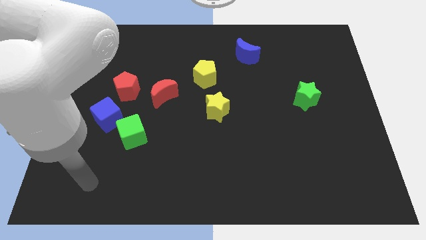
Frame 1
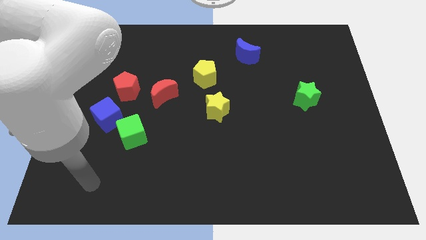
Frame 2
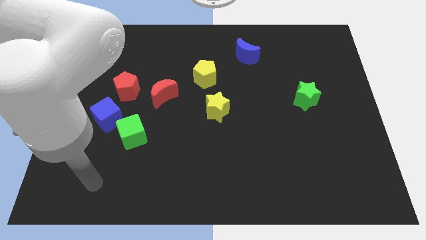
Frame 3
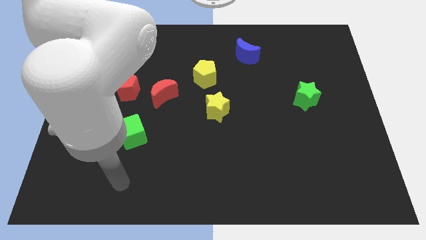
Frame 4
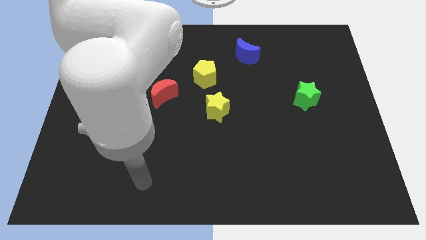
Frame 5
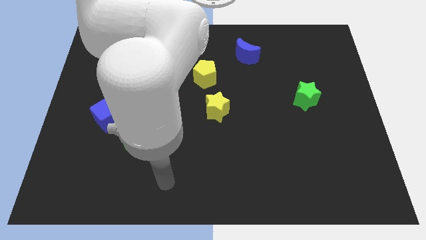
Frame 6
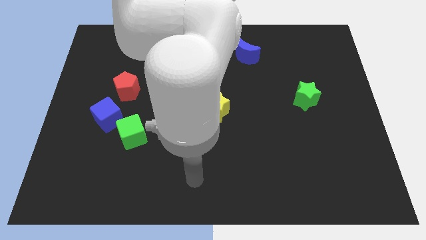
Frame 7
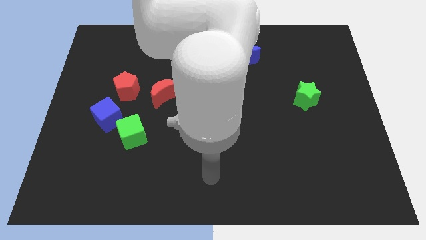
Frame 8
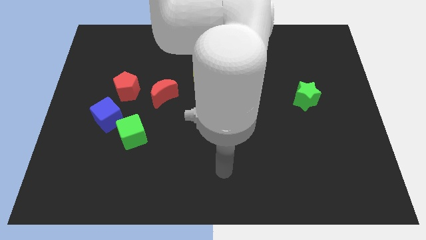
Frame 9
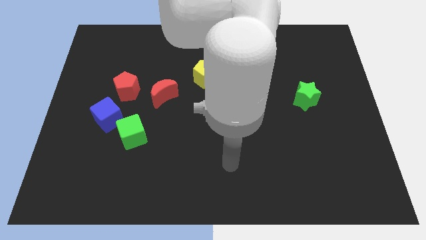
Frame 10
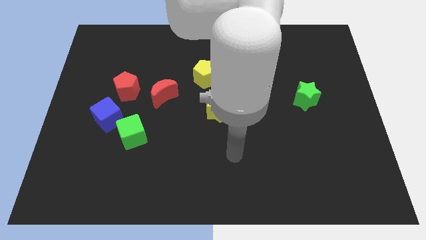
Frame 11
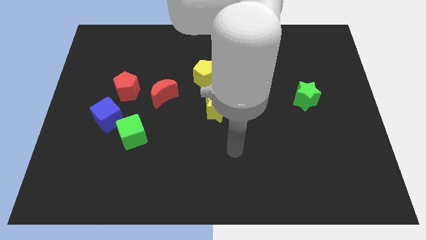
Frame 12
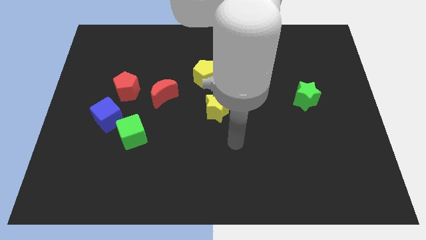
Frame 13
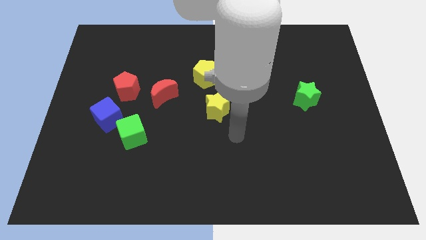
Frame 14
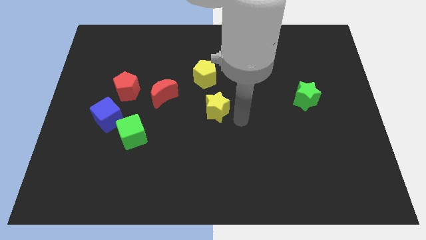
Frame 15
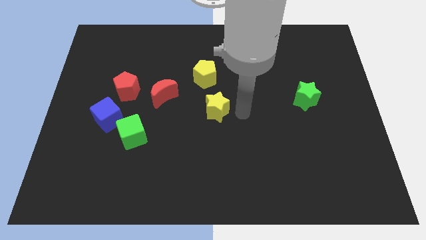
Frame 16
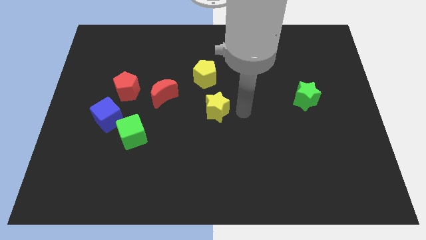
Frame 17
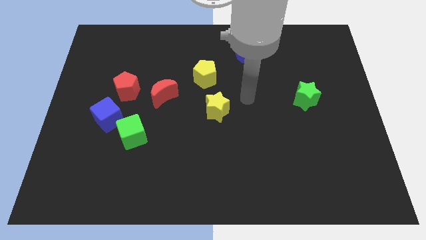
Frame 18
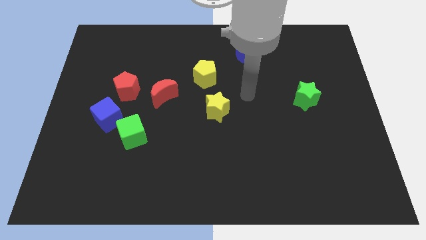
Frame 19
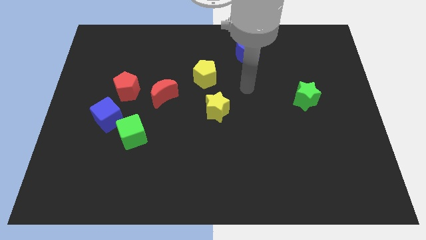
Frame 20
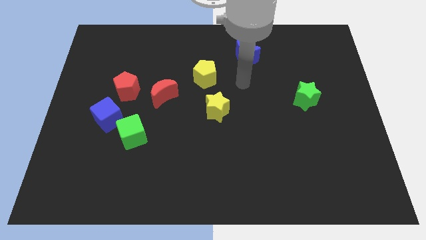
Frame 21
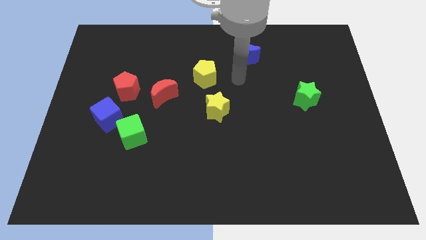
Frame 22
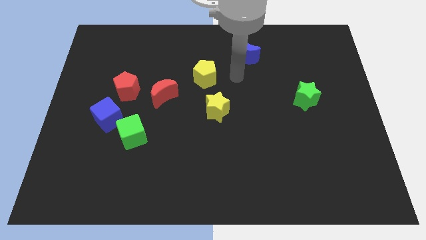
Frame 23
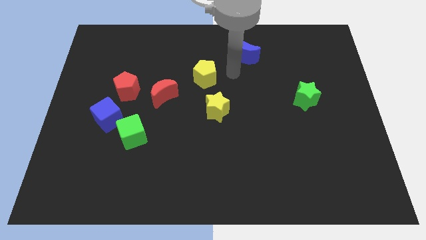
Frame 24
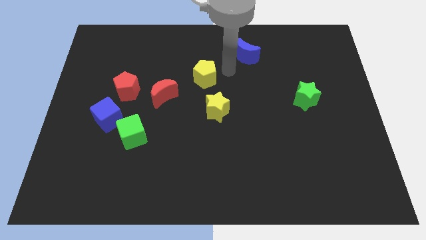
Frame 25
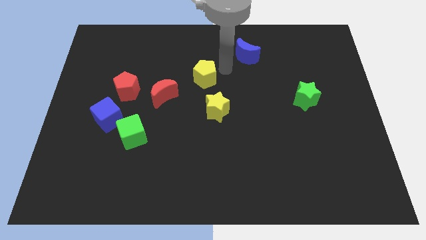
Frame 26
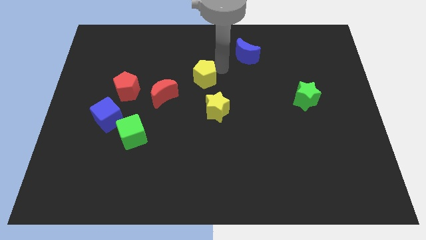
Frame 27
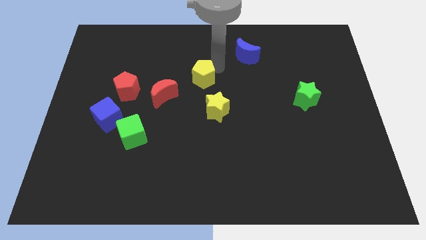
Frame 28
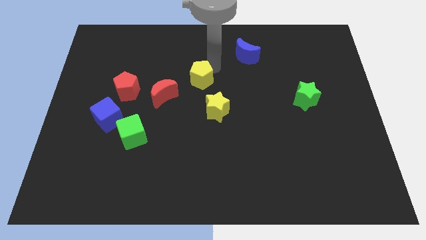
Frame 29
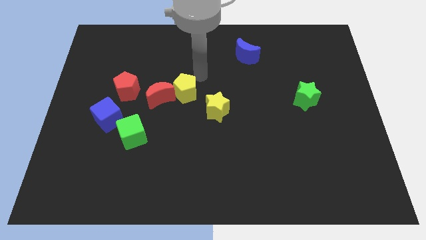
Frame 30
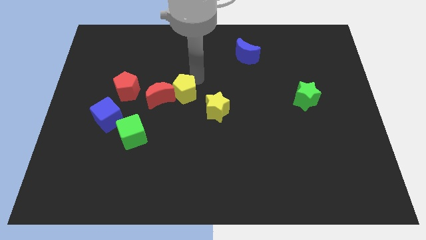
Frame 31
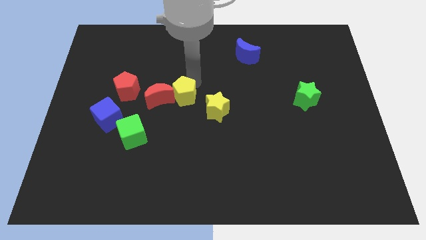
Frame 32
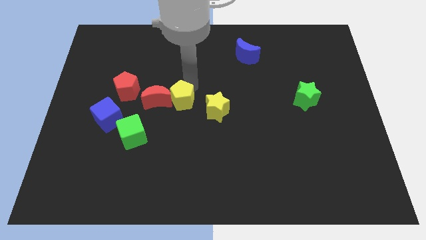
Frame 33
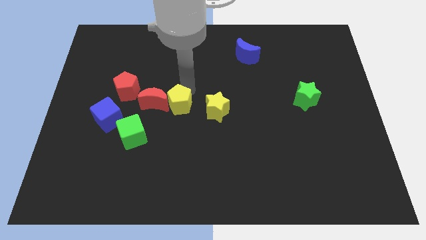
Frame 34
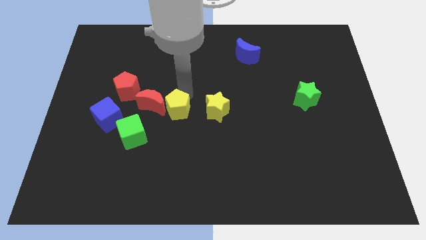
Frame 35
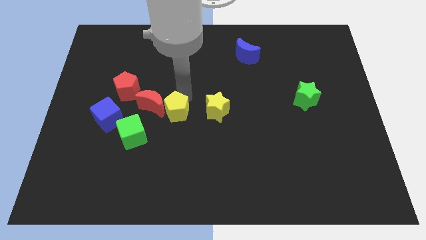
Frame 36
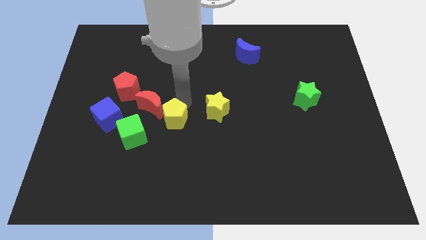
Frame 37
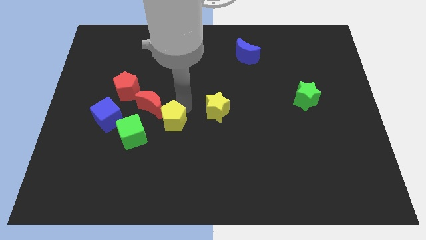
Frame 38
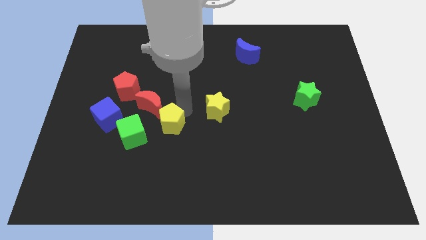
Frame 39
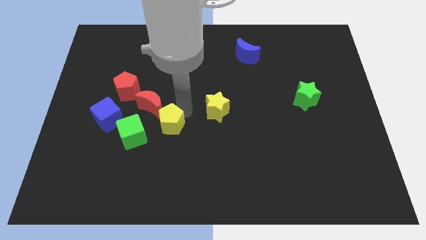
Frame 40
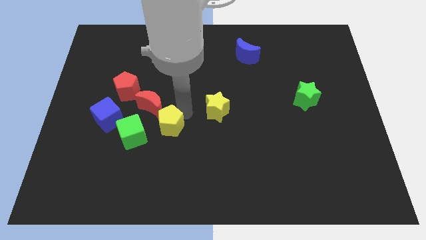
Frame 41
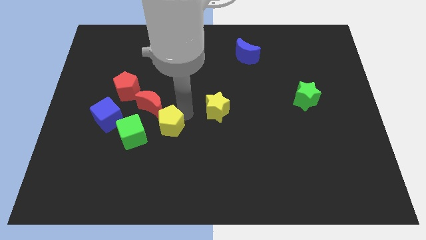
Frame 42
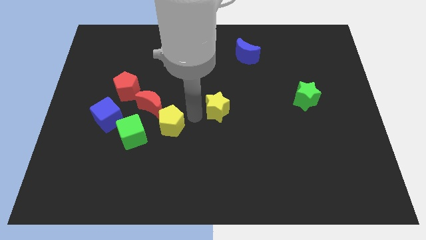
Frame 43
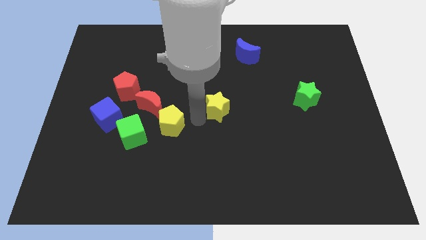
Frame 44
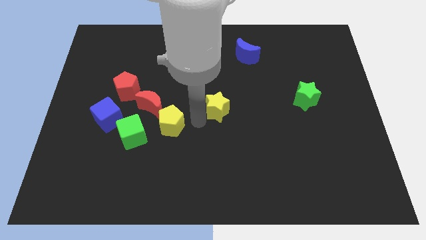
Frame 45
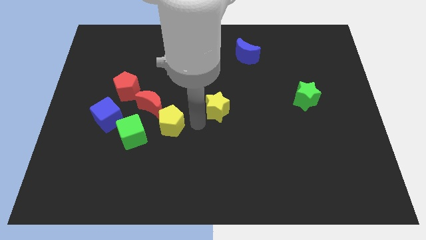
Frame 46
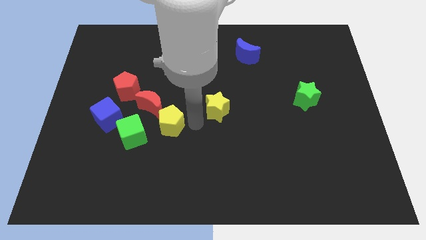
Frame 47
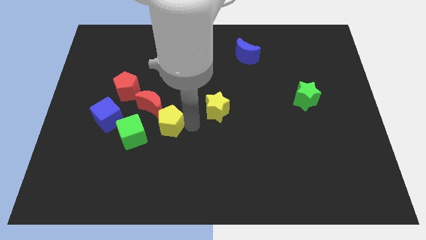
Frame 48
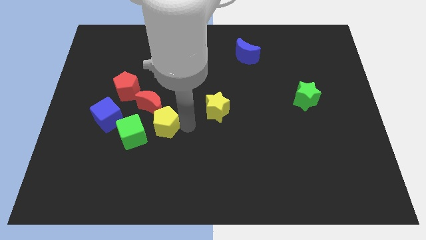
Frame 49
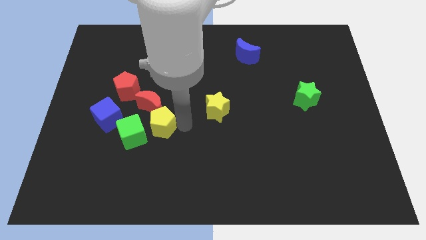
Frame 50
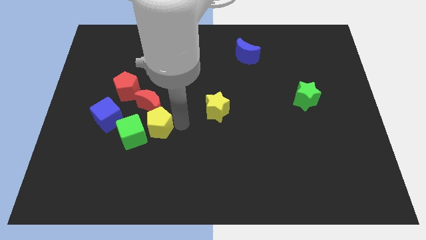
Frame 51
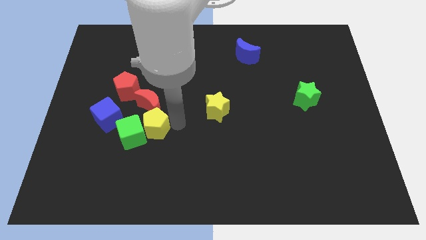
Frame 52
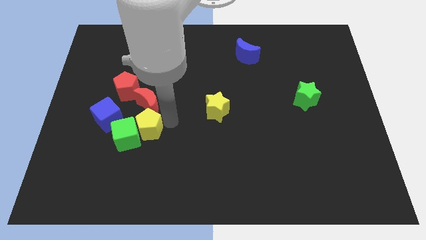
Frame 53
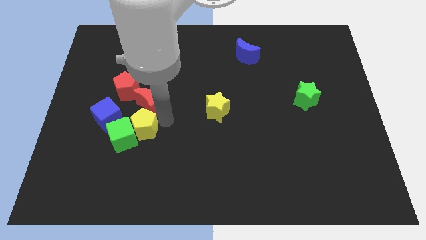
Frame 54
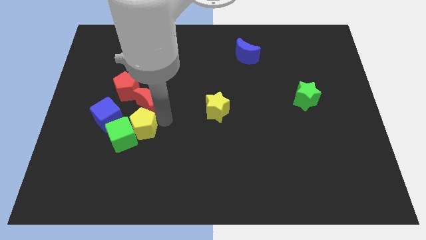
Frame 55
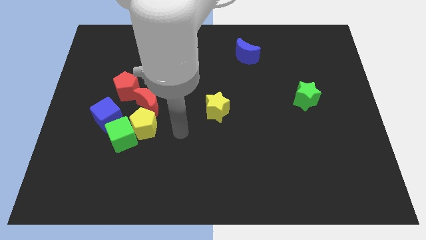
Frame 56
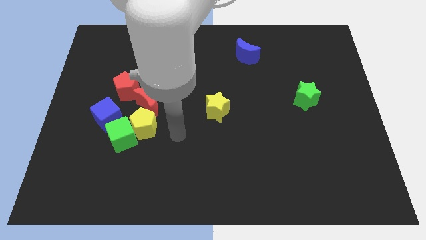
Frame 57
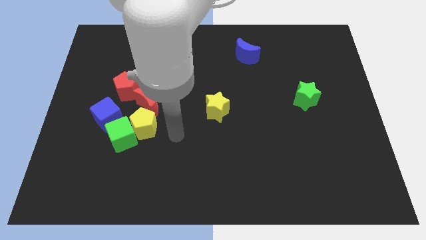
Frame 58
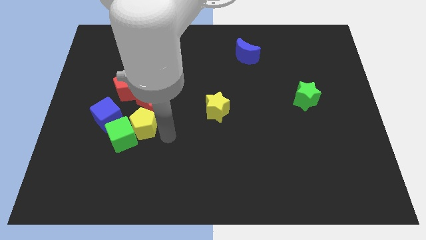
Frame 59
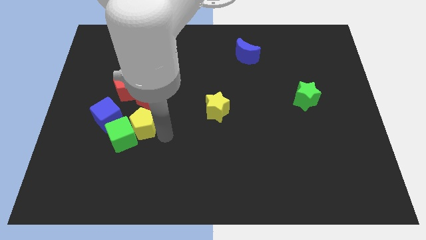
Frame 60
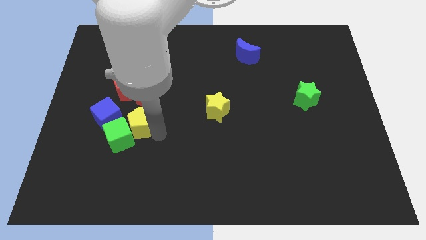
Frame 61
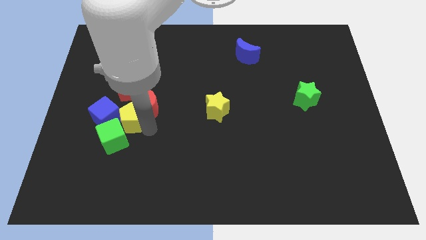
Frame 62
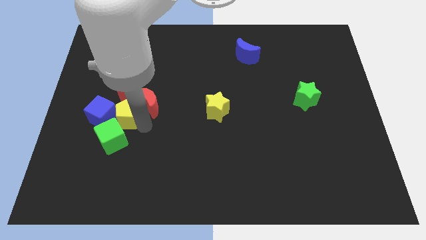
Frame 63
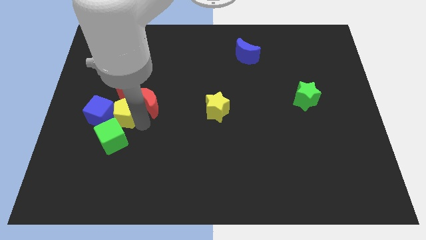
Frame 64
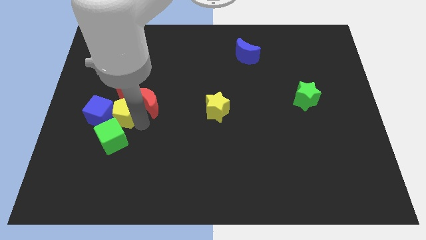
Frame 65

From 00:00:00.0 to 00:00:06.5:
put the yellow pentagon towards the blue cube

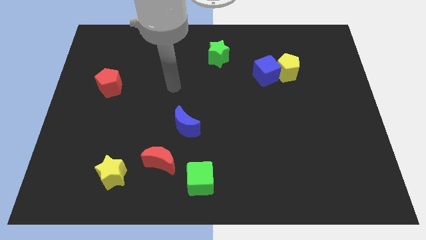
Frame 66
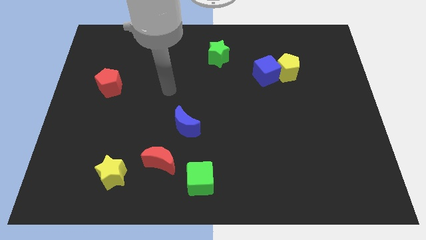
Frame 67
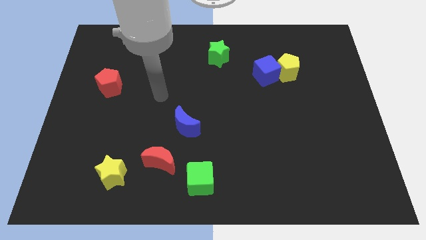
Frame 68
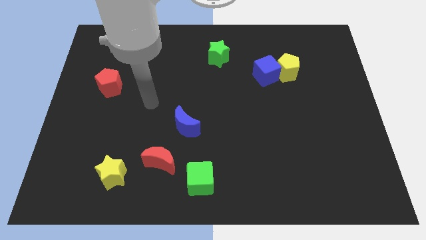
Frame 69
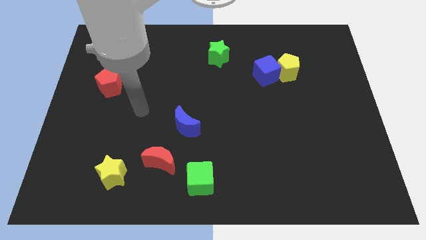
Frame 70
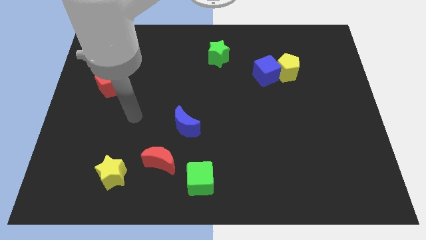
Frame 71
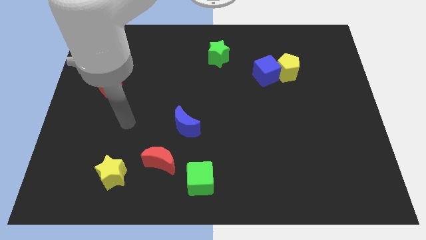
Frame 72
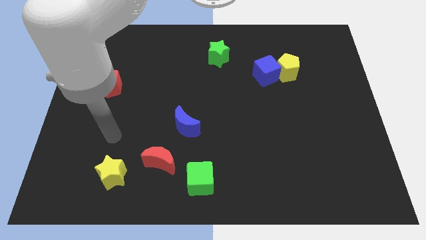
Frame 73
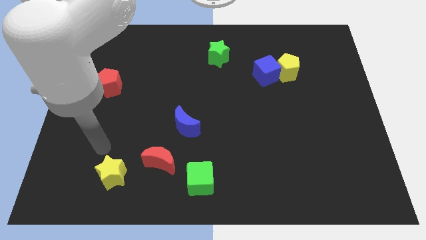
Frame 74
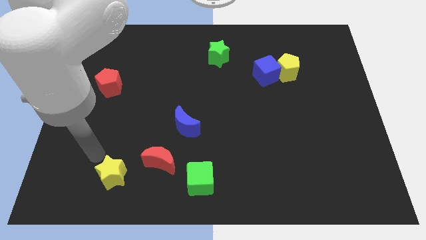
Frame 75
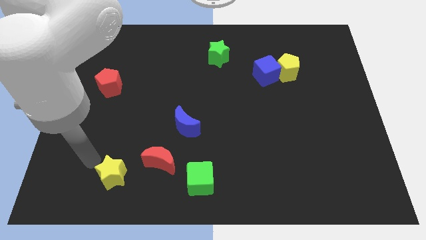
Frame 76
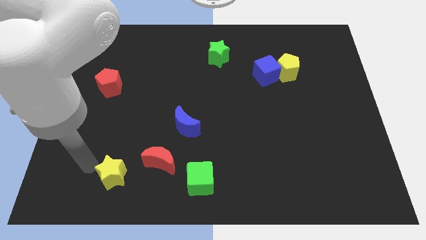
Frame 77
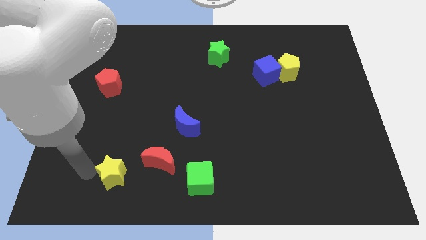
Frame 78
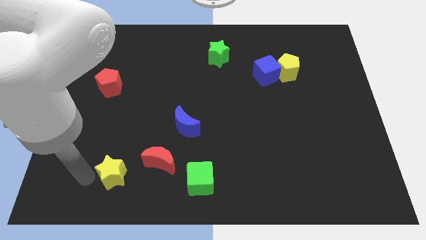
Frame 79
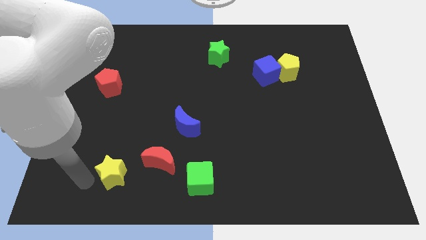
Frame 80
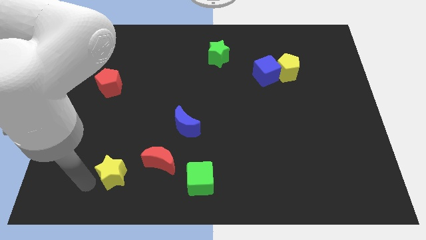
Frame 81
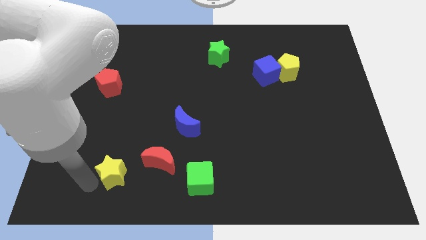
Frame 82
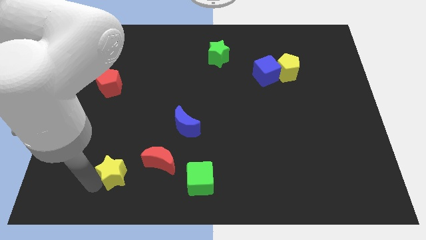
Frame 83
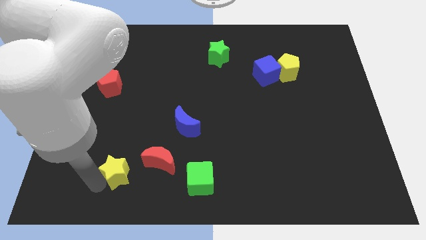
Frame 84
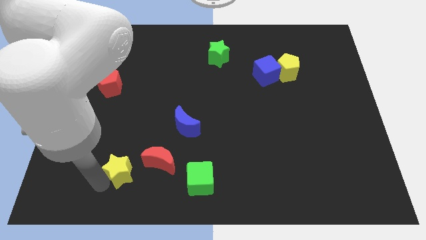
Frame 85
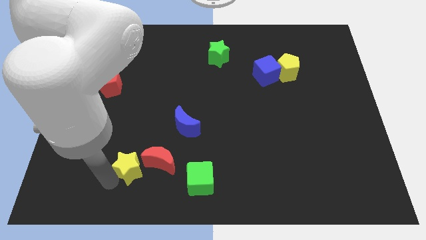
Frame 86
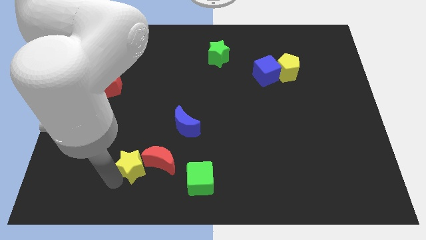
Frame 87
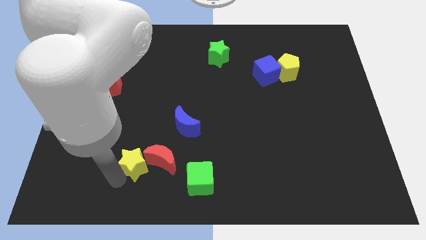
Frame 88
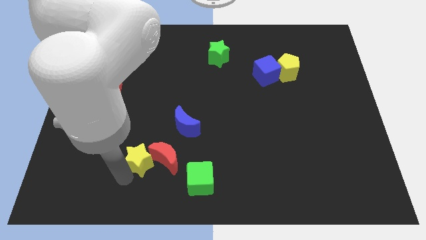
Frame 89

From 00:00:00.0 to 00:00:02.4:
move the yellow star next to the red moon
